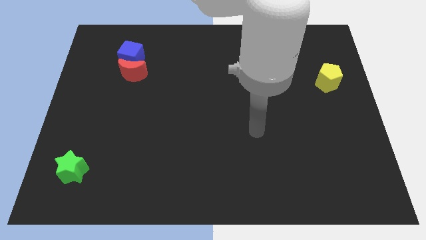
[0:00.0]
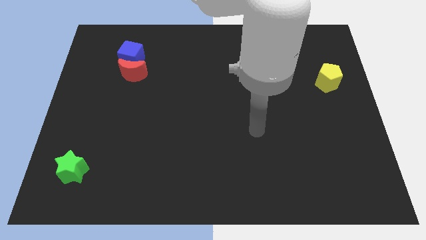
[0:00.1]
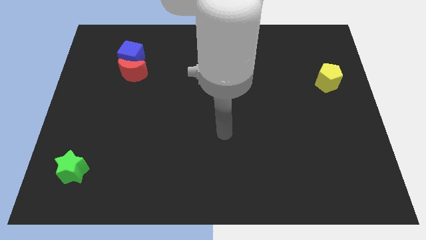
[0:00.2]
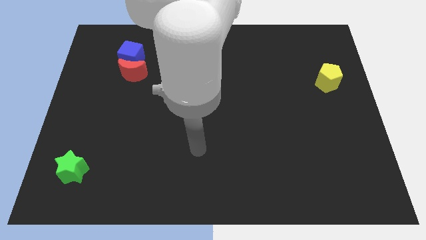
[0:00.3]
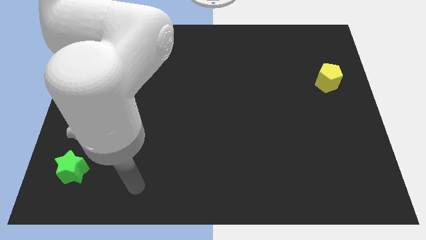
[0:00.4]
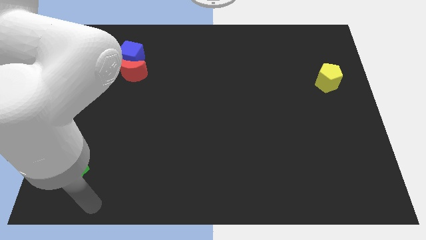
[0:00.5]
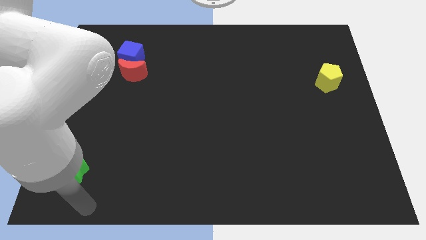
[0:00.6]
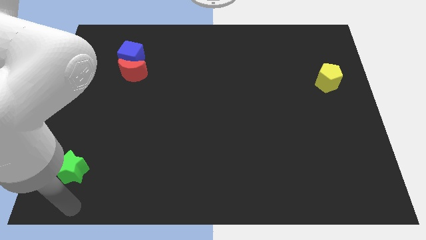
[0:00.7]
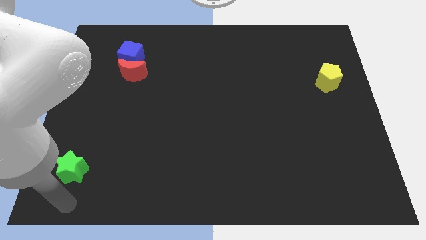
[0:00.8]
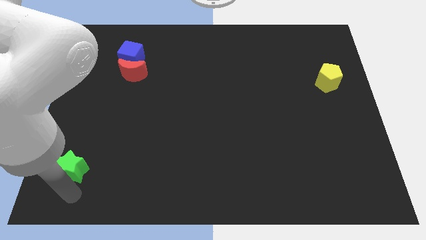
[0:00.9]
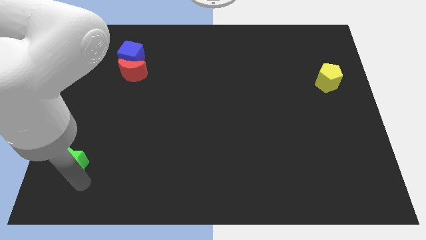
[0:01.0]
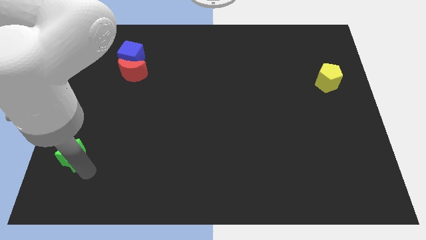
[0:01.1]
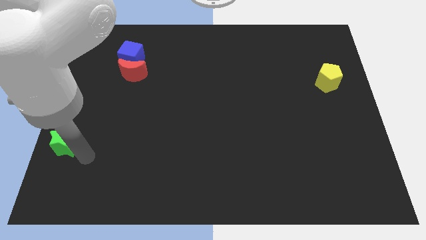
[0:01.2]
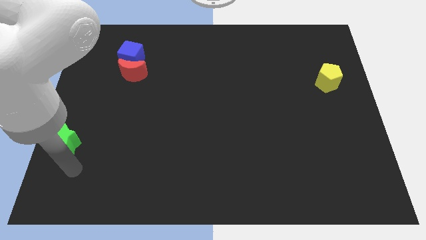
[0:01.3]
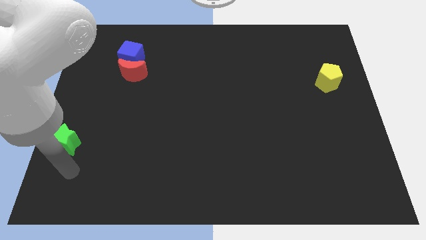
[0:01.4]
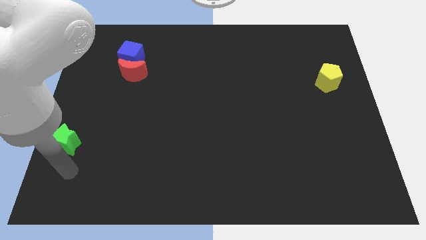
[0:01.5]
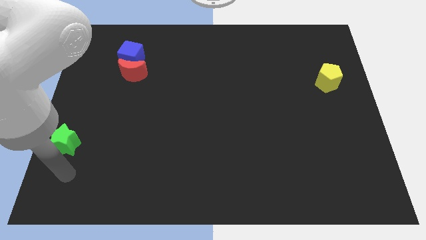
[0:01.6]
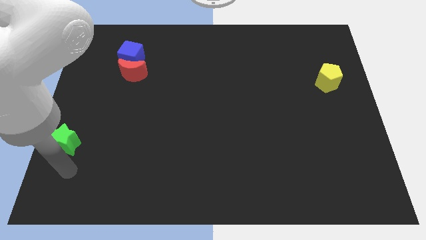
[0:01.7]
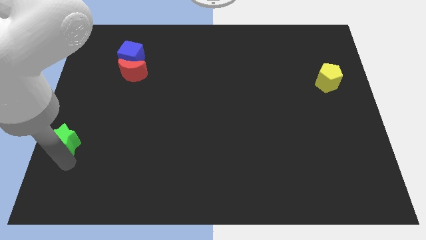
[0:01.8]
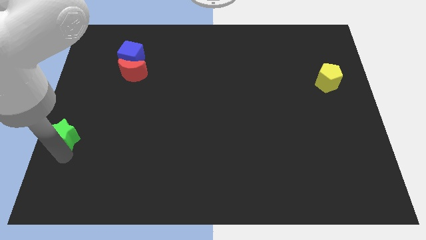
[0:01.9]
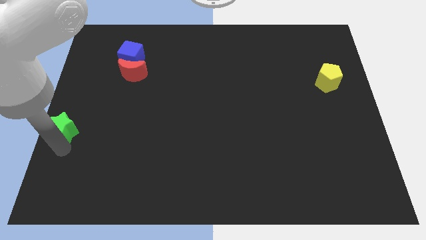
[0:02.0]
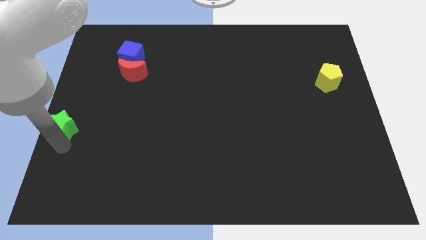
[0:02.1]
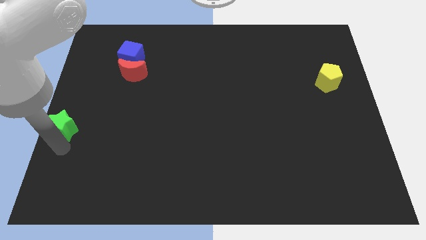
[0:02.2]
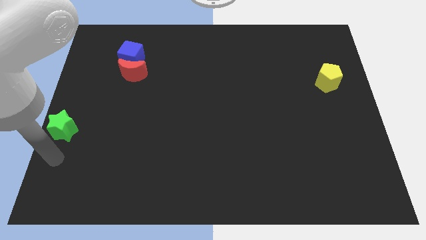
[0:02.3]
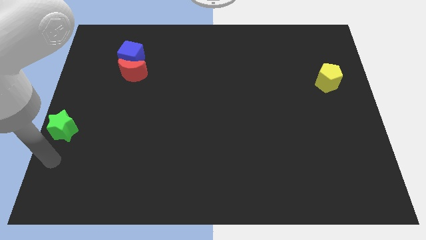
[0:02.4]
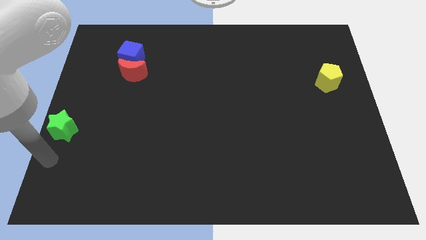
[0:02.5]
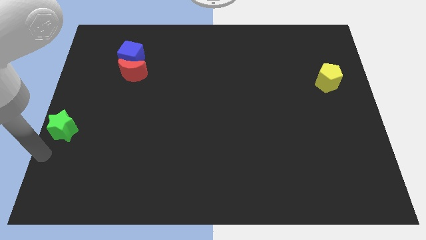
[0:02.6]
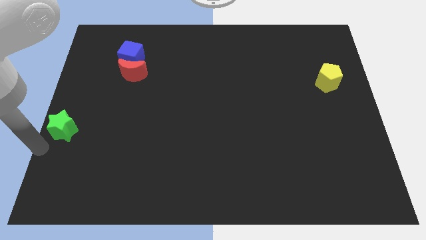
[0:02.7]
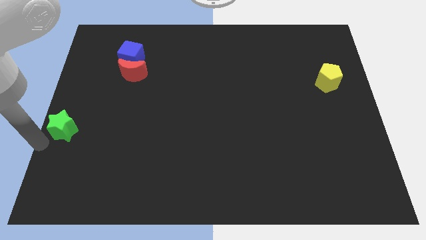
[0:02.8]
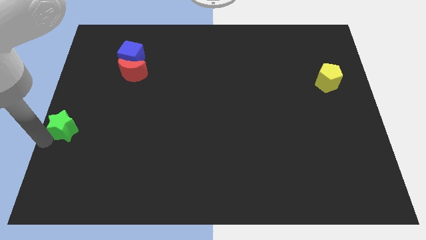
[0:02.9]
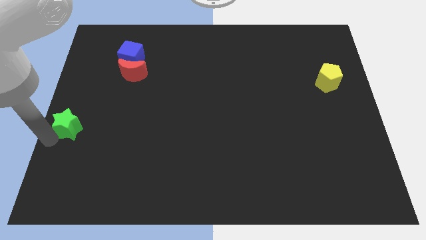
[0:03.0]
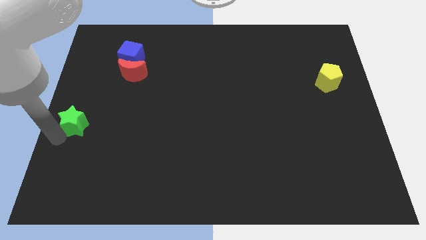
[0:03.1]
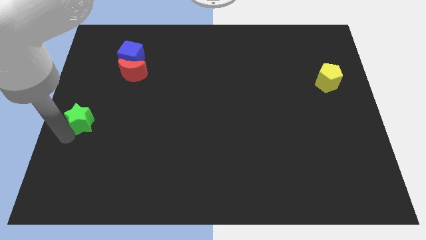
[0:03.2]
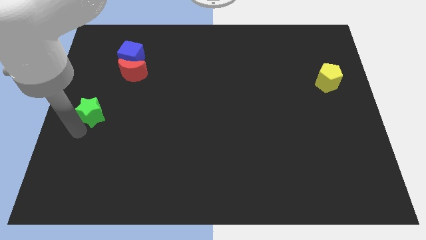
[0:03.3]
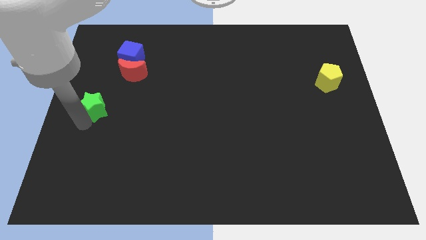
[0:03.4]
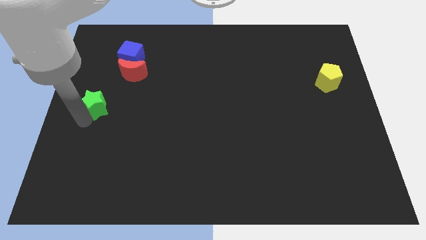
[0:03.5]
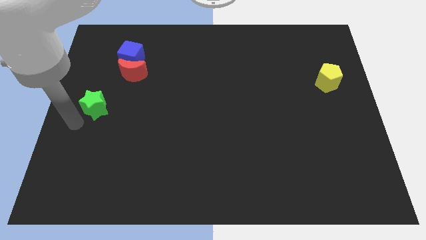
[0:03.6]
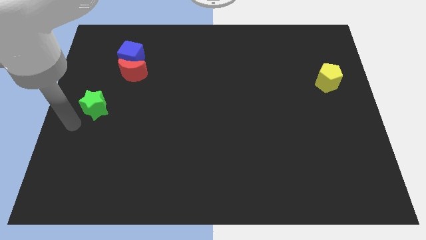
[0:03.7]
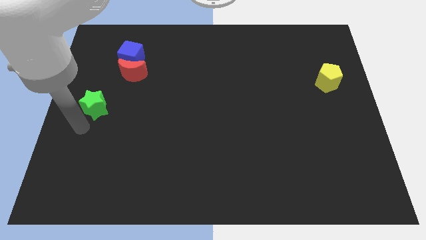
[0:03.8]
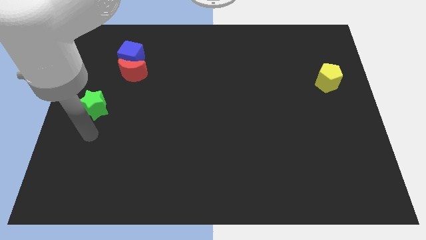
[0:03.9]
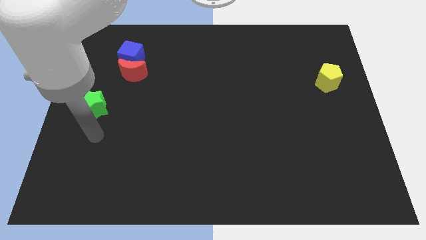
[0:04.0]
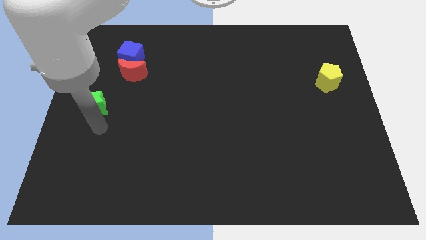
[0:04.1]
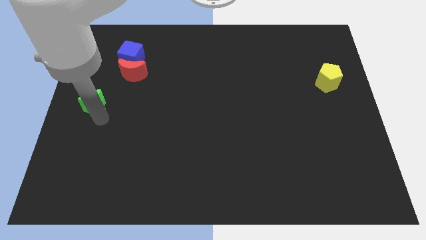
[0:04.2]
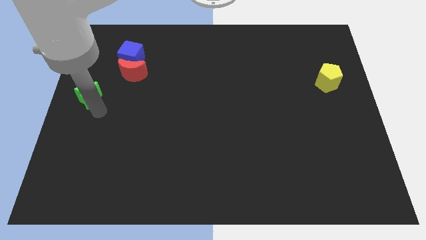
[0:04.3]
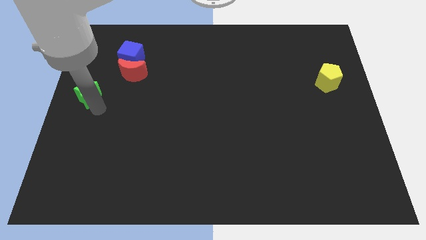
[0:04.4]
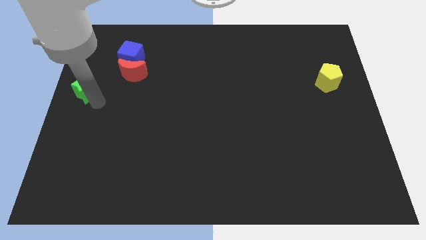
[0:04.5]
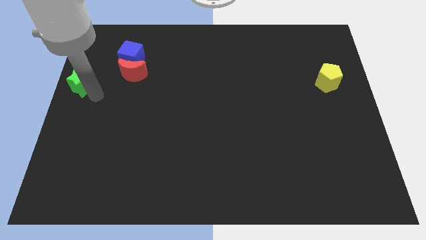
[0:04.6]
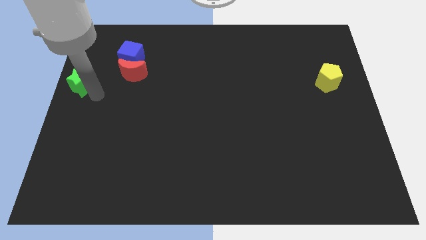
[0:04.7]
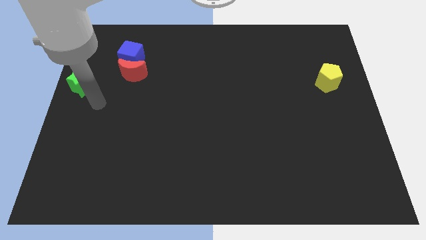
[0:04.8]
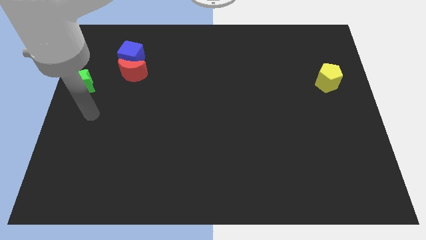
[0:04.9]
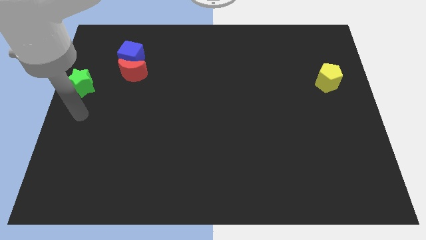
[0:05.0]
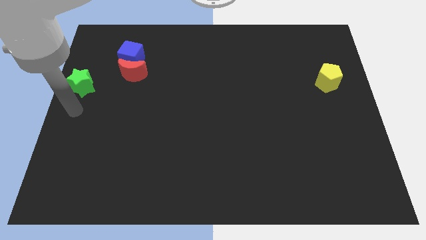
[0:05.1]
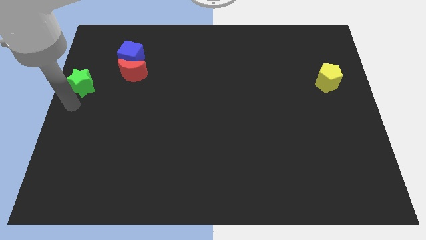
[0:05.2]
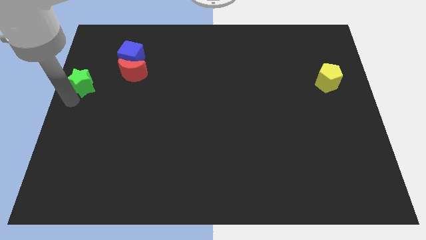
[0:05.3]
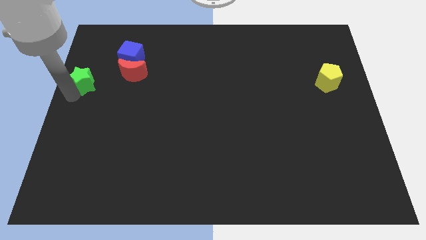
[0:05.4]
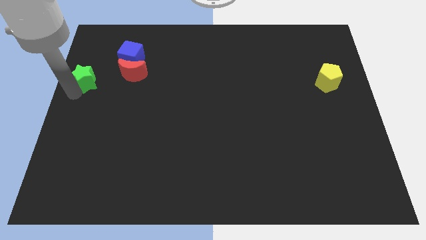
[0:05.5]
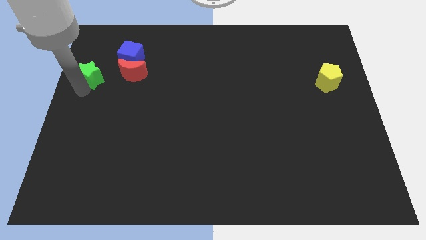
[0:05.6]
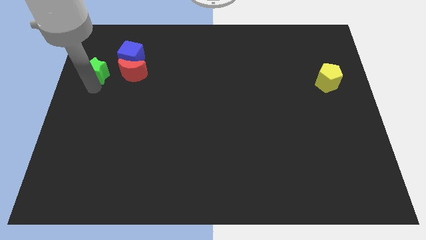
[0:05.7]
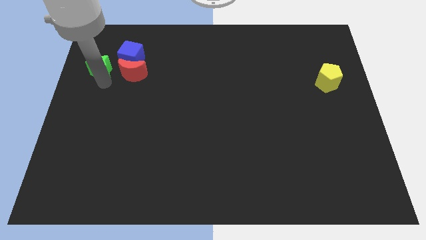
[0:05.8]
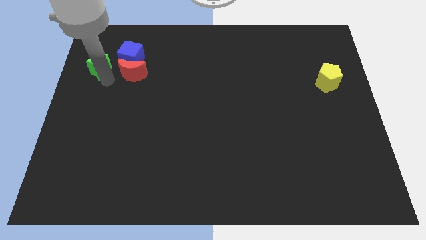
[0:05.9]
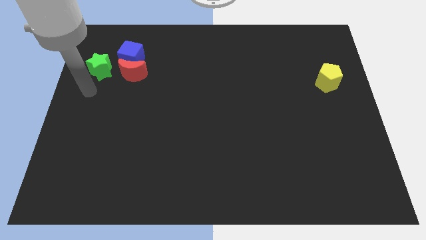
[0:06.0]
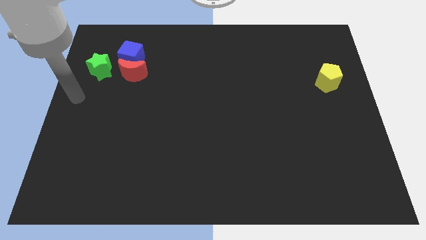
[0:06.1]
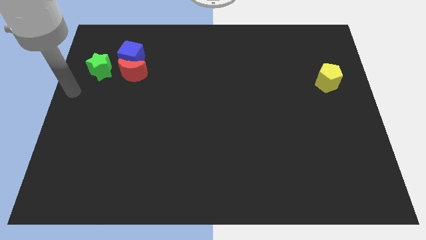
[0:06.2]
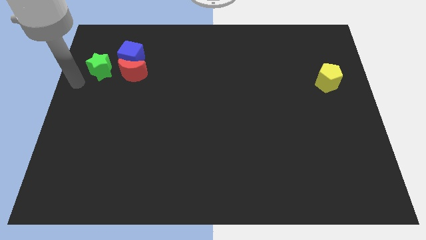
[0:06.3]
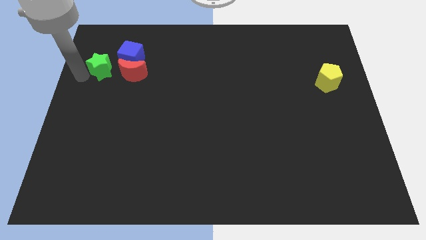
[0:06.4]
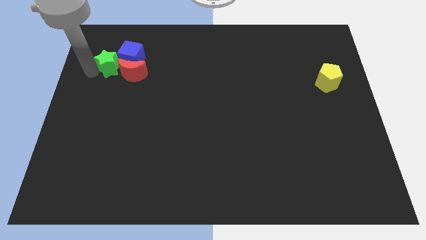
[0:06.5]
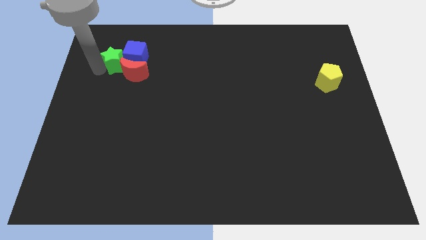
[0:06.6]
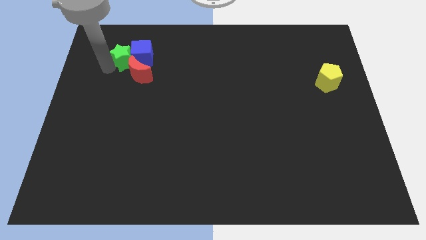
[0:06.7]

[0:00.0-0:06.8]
push the star towards the blue block

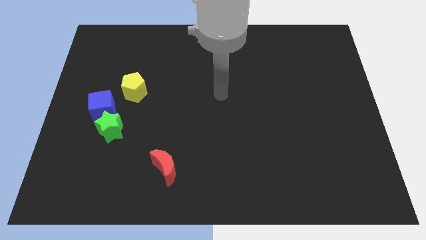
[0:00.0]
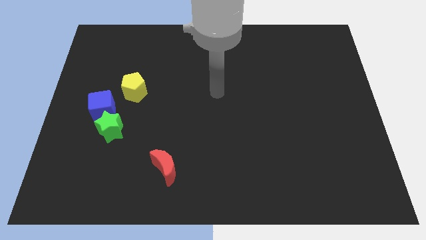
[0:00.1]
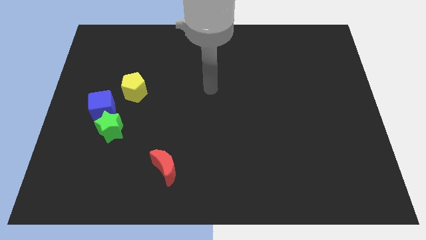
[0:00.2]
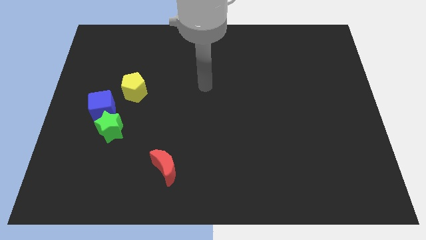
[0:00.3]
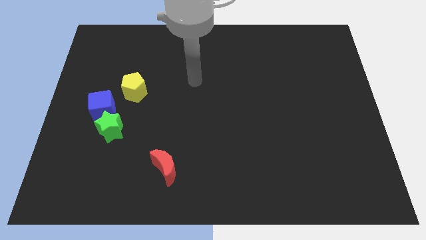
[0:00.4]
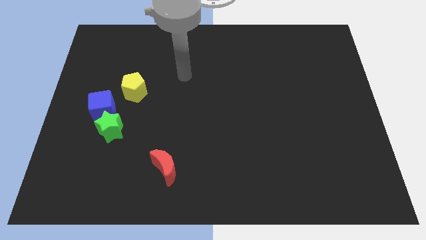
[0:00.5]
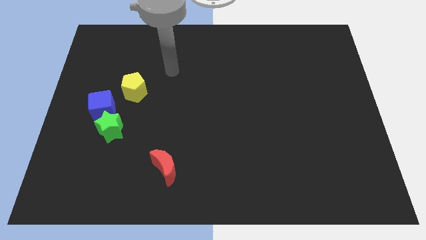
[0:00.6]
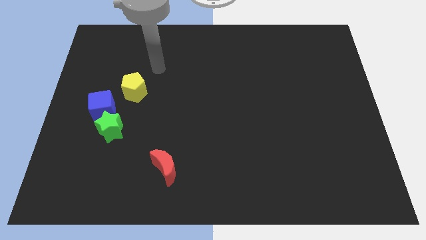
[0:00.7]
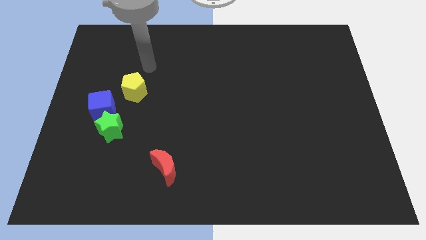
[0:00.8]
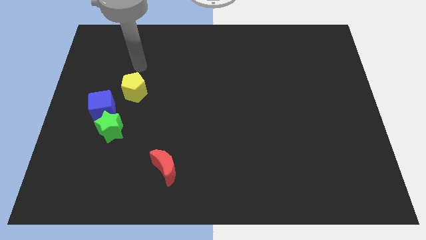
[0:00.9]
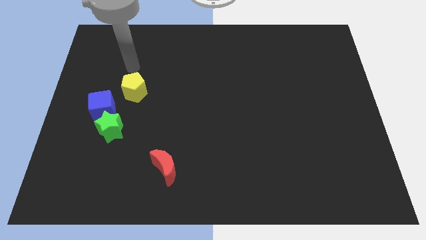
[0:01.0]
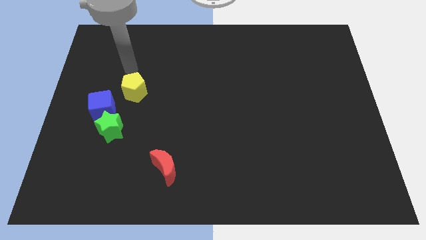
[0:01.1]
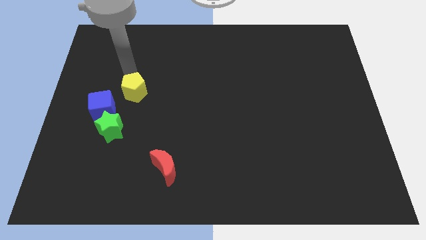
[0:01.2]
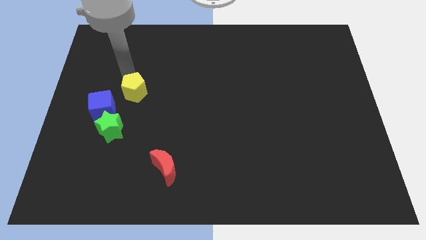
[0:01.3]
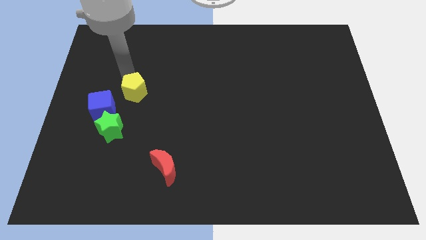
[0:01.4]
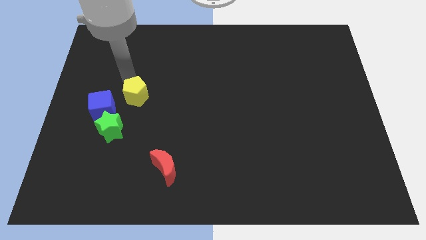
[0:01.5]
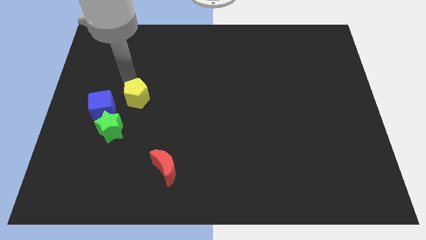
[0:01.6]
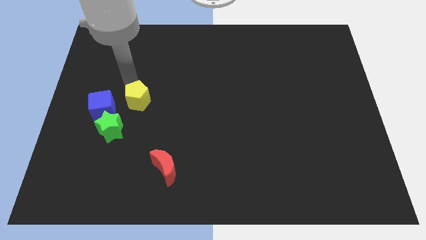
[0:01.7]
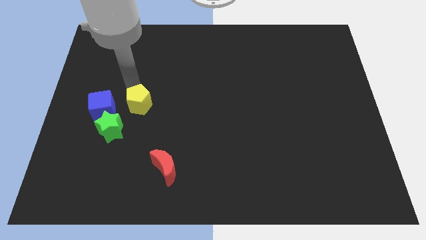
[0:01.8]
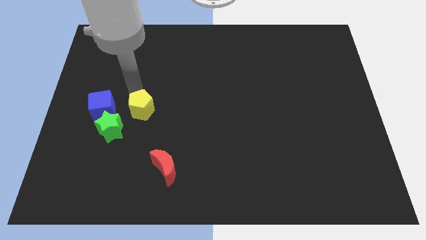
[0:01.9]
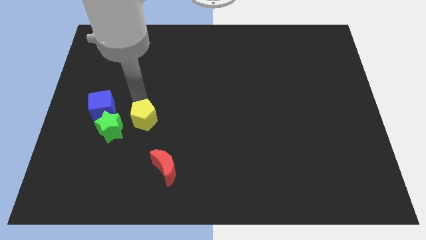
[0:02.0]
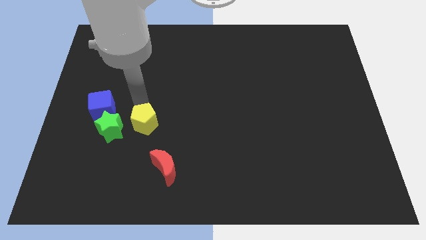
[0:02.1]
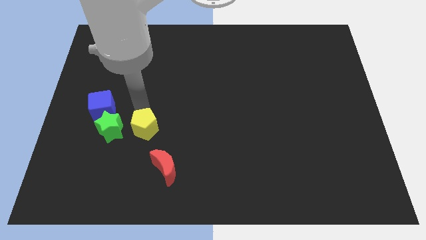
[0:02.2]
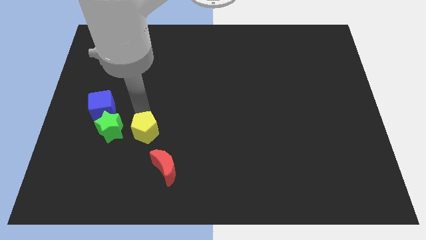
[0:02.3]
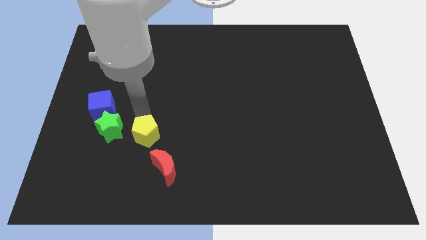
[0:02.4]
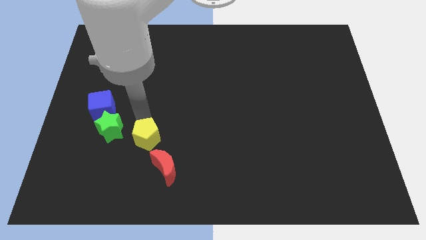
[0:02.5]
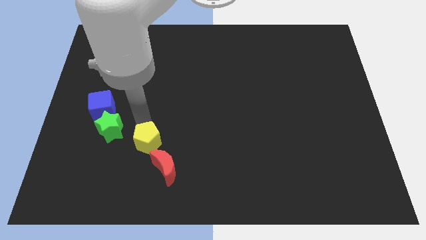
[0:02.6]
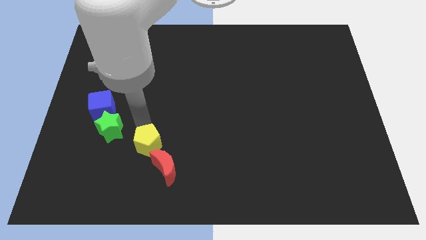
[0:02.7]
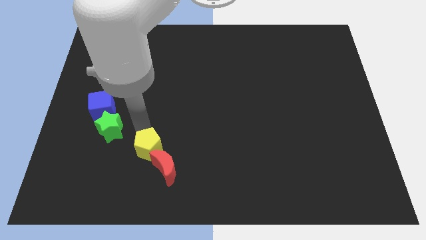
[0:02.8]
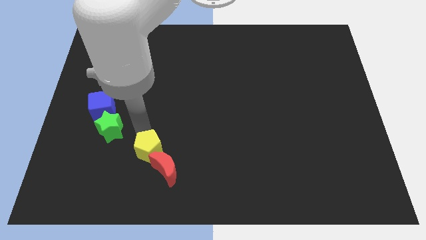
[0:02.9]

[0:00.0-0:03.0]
put the yellow pentagon close to the moon
